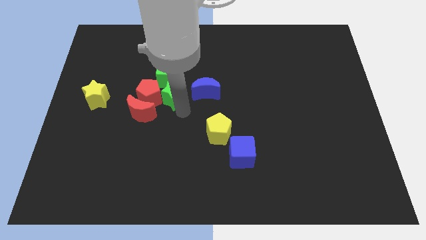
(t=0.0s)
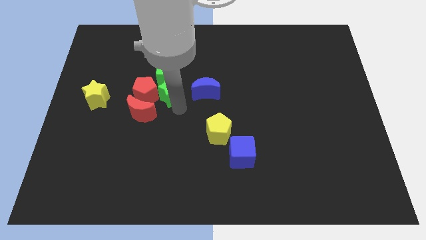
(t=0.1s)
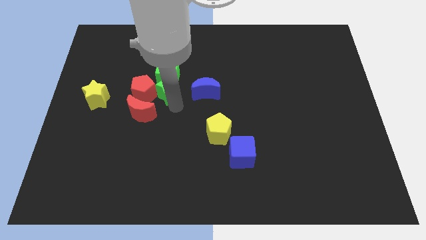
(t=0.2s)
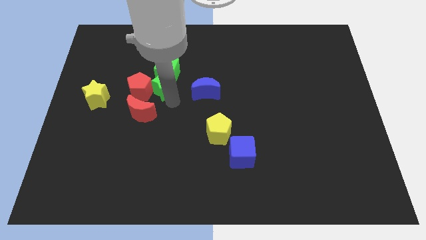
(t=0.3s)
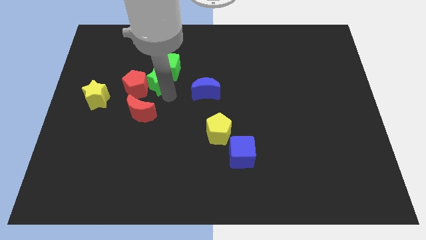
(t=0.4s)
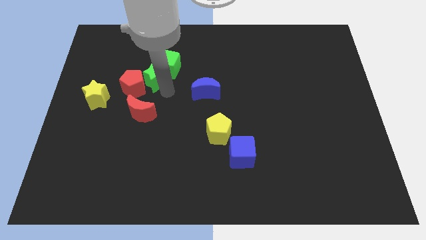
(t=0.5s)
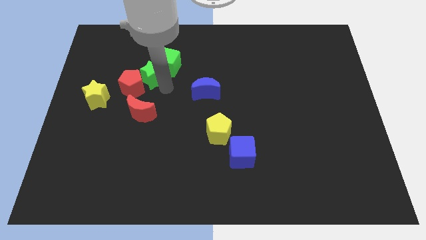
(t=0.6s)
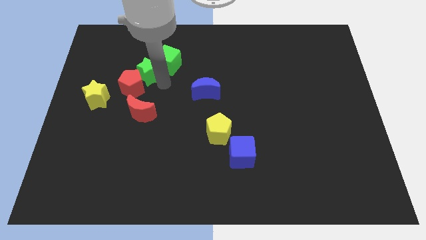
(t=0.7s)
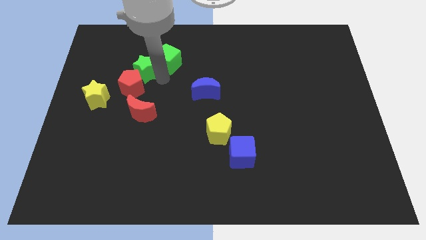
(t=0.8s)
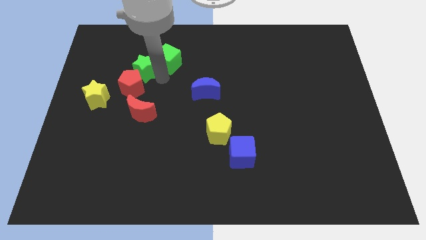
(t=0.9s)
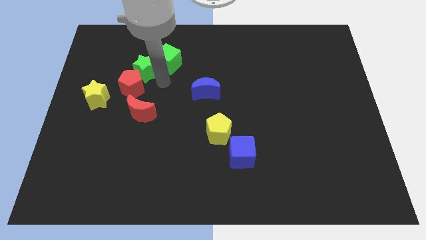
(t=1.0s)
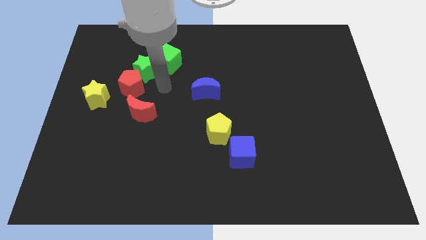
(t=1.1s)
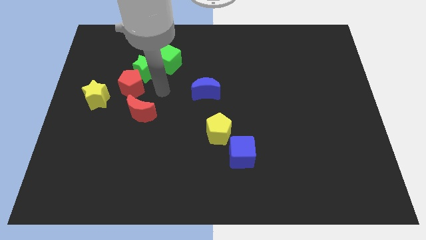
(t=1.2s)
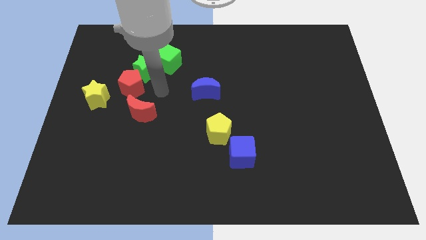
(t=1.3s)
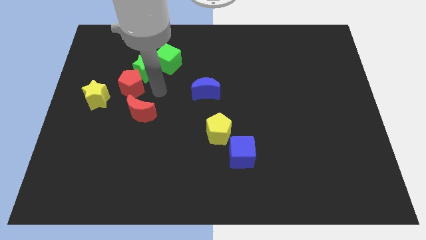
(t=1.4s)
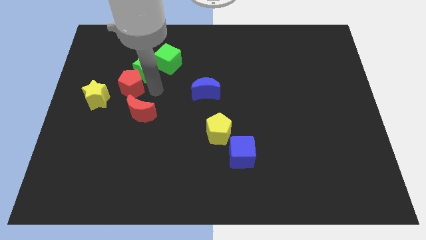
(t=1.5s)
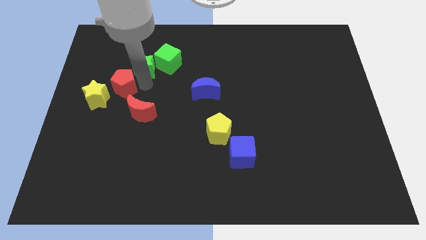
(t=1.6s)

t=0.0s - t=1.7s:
push the green star to the bottom left of the green cube

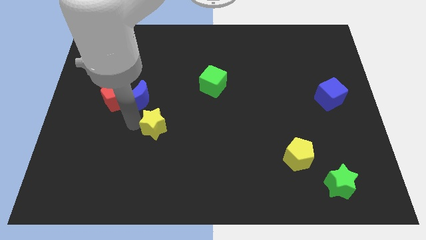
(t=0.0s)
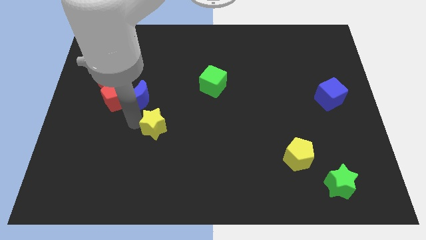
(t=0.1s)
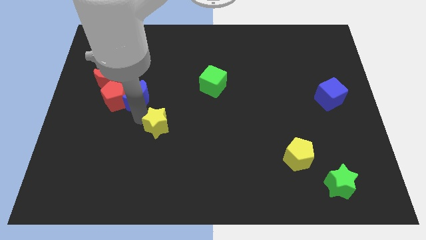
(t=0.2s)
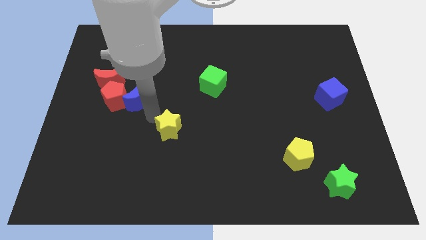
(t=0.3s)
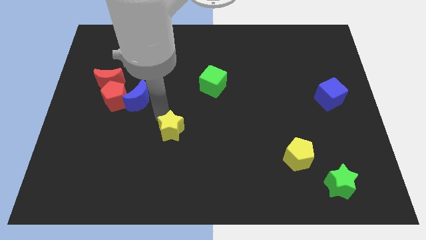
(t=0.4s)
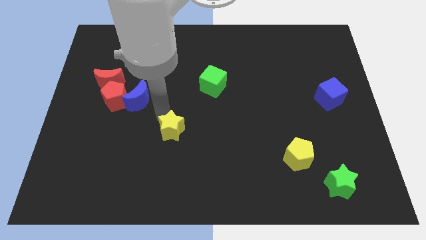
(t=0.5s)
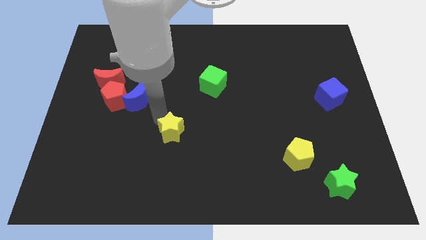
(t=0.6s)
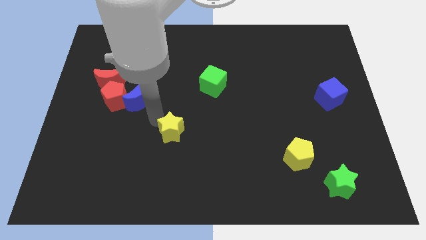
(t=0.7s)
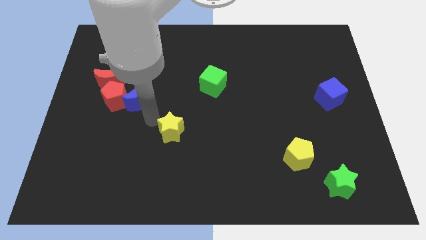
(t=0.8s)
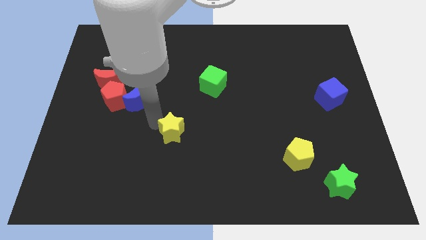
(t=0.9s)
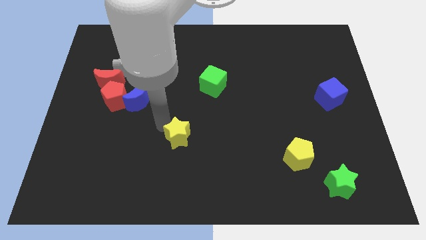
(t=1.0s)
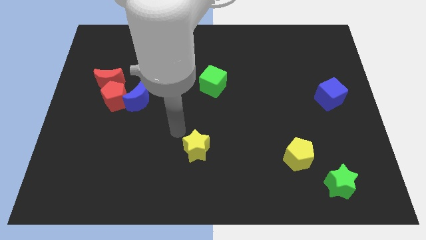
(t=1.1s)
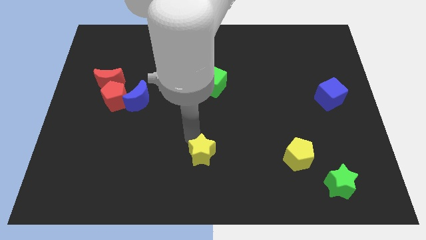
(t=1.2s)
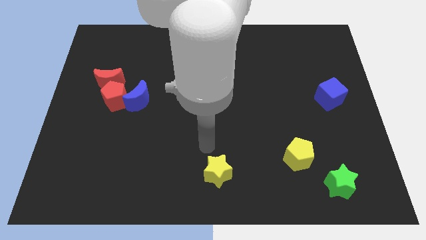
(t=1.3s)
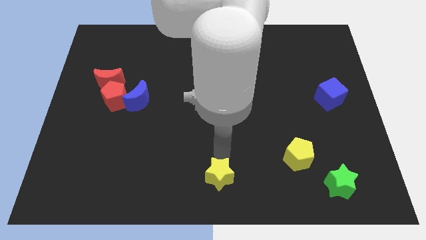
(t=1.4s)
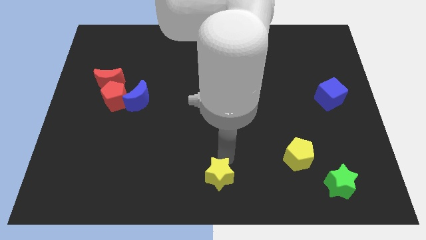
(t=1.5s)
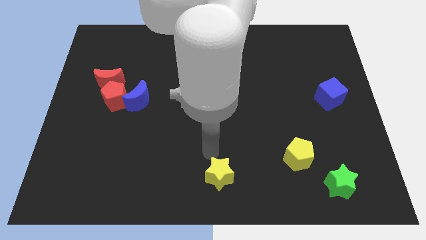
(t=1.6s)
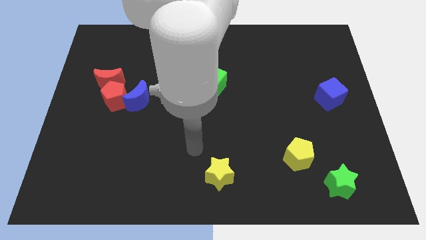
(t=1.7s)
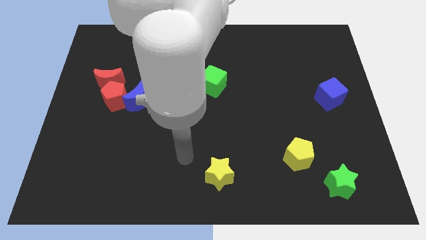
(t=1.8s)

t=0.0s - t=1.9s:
push the yellow star towards the bottom centerof the board

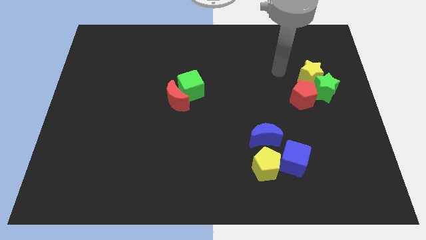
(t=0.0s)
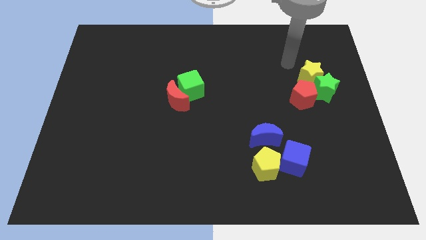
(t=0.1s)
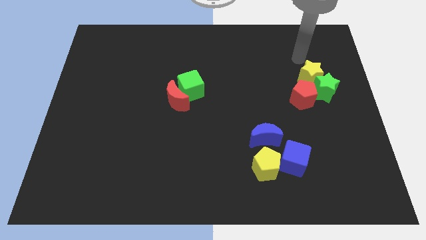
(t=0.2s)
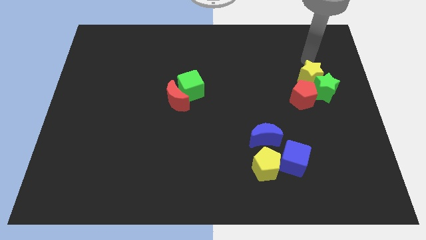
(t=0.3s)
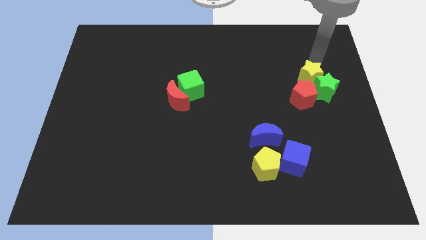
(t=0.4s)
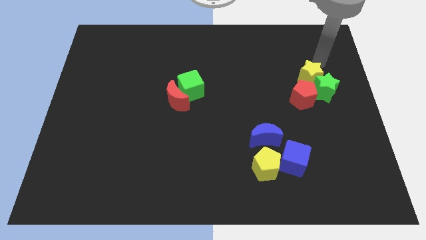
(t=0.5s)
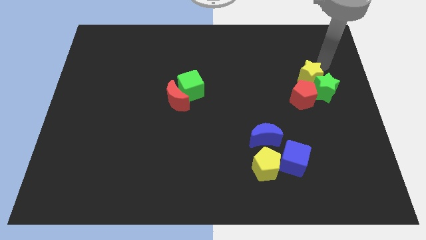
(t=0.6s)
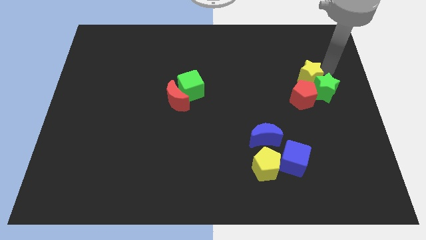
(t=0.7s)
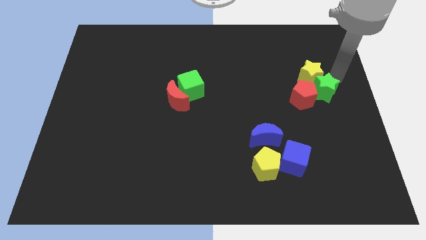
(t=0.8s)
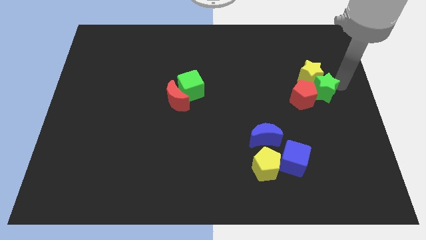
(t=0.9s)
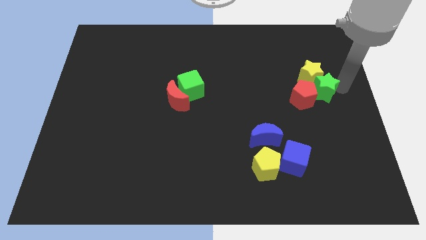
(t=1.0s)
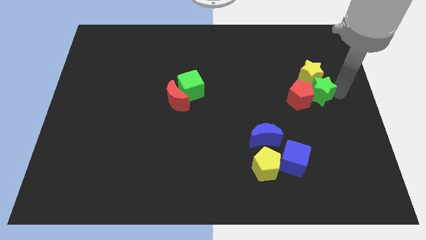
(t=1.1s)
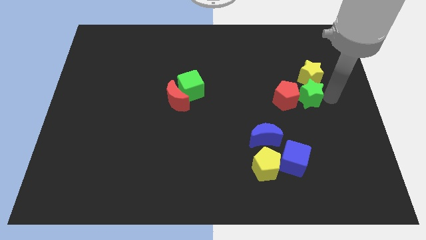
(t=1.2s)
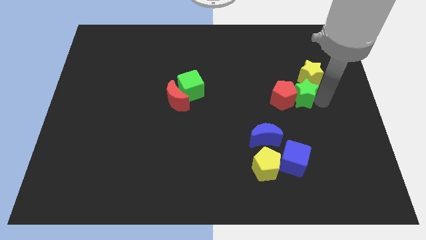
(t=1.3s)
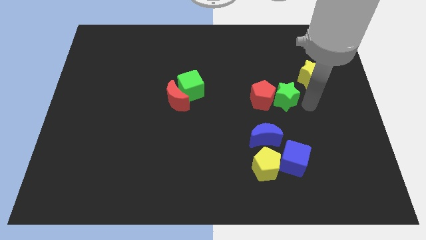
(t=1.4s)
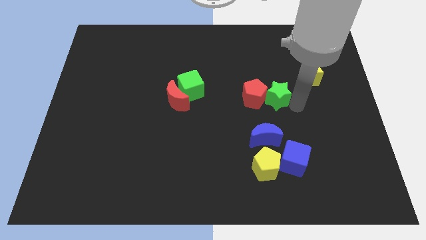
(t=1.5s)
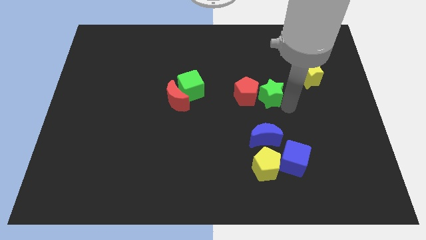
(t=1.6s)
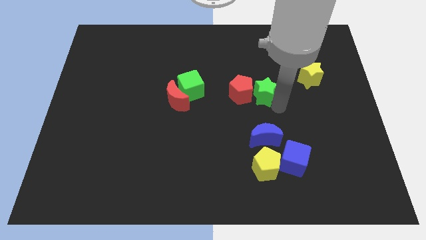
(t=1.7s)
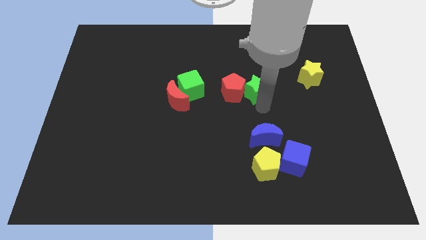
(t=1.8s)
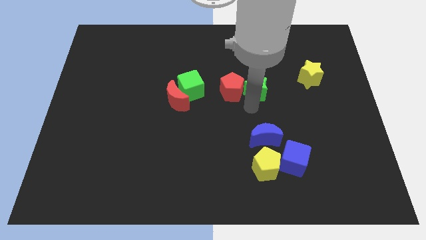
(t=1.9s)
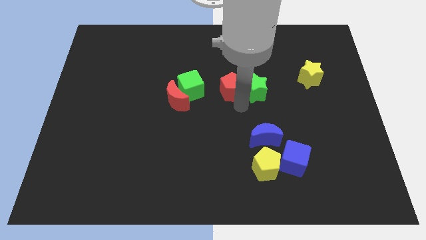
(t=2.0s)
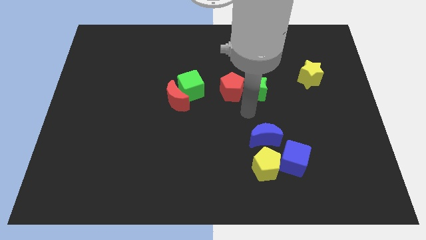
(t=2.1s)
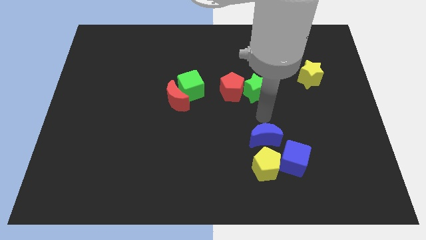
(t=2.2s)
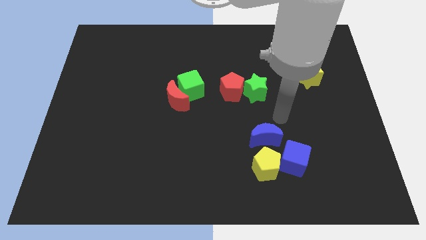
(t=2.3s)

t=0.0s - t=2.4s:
drag the green star to the left

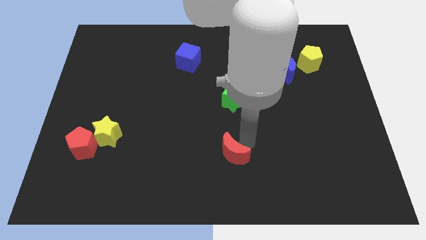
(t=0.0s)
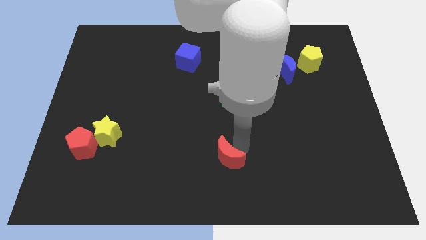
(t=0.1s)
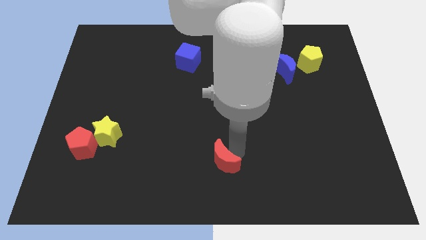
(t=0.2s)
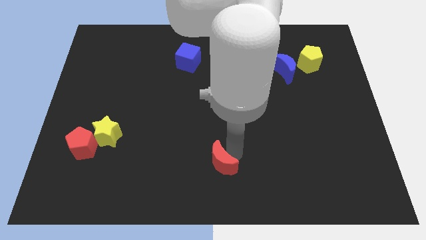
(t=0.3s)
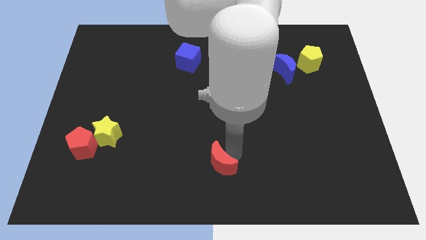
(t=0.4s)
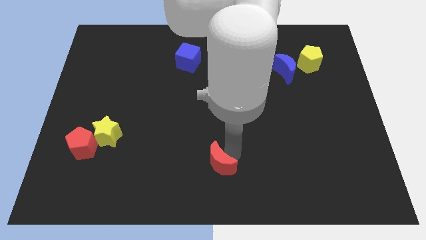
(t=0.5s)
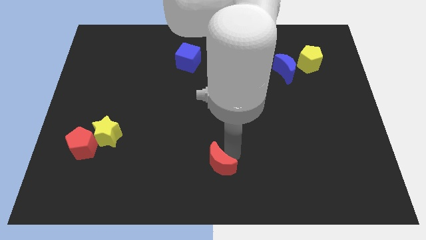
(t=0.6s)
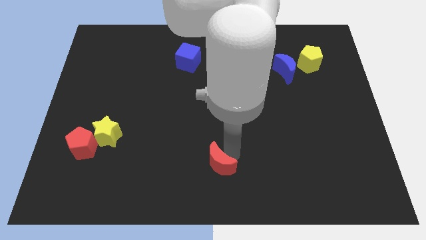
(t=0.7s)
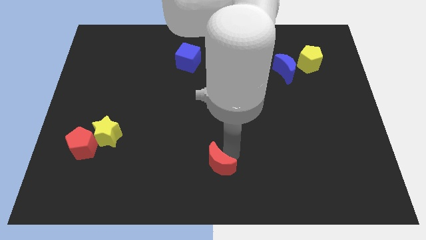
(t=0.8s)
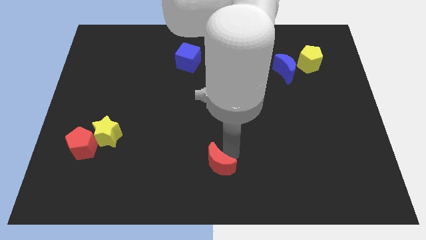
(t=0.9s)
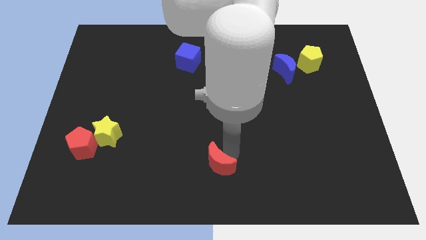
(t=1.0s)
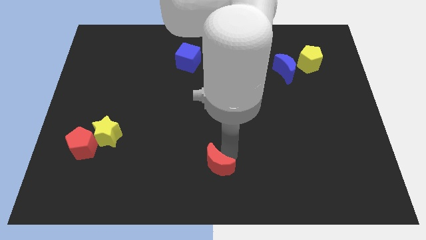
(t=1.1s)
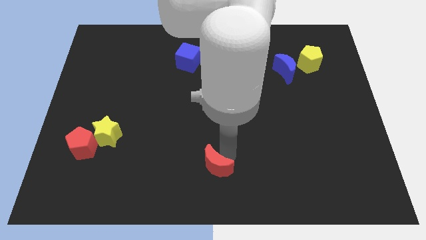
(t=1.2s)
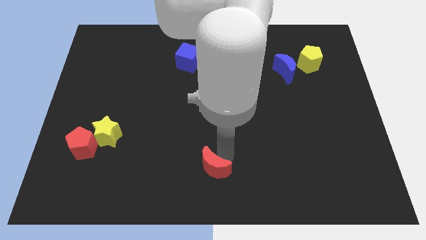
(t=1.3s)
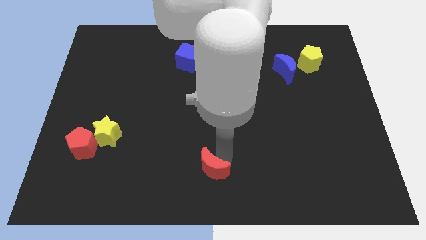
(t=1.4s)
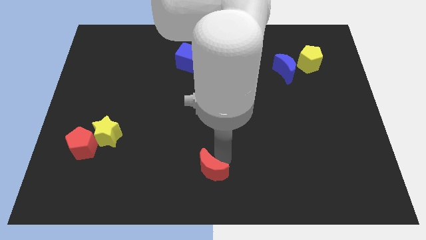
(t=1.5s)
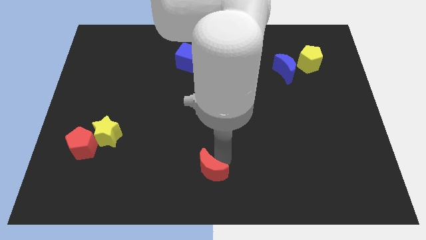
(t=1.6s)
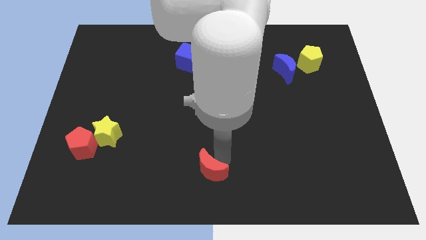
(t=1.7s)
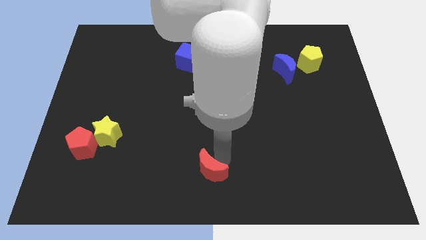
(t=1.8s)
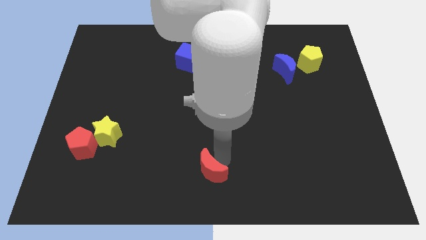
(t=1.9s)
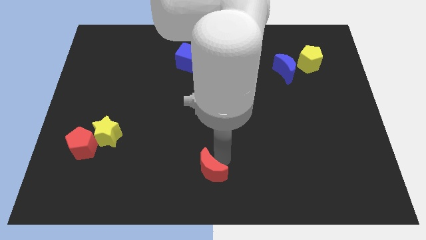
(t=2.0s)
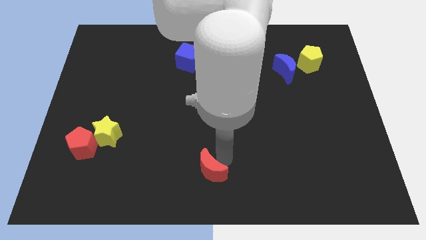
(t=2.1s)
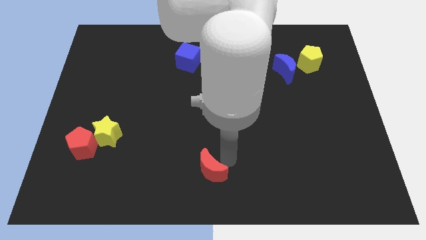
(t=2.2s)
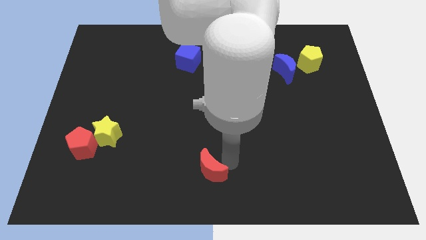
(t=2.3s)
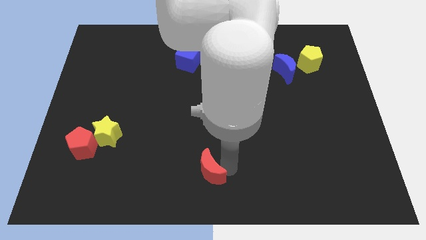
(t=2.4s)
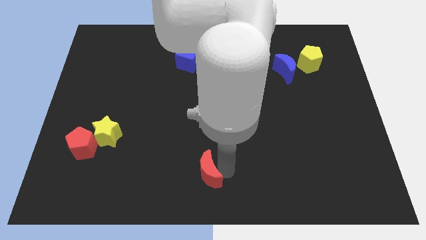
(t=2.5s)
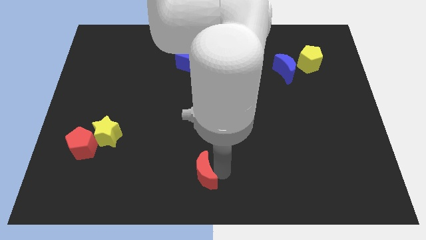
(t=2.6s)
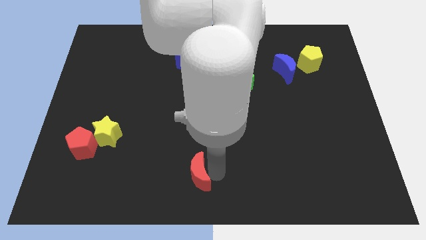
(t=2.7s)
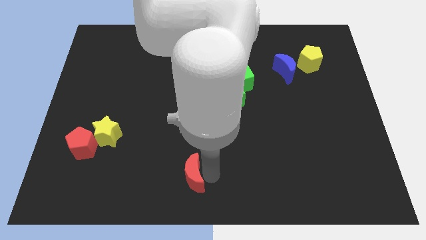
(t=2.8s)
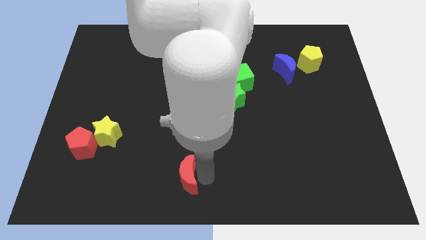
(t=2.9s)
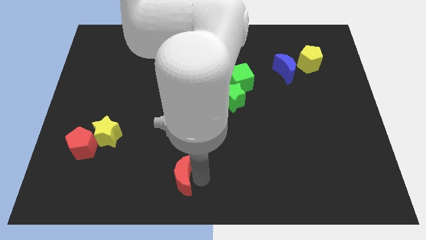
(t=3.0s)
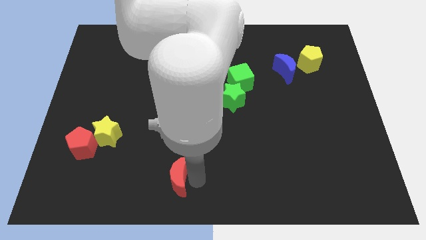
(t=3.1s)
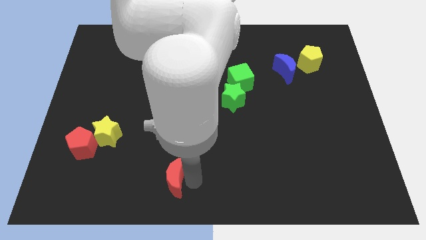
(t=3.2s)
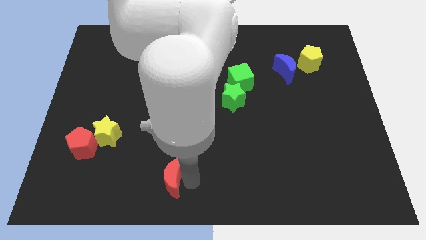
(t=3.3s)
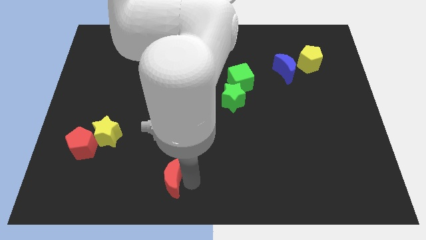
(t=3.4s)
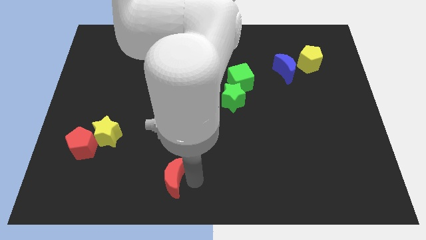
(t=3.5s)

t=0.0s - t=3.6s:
move red moon towards left
